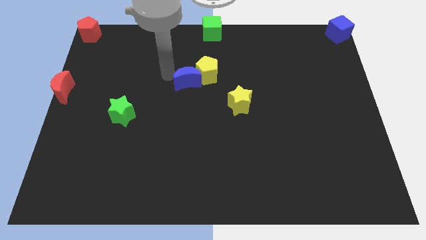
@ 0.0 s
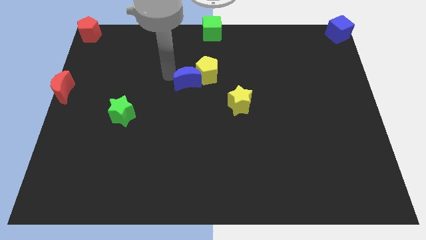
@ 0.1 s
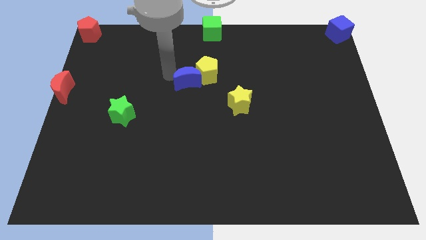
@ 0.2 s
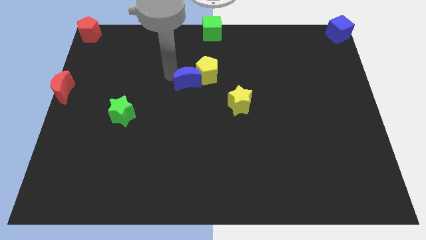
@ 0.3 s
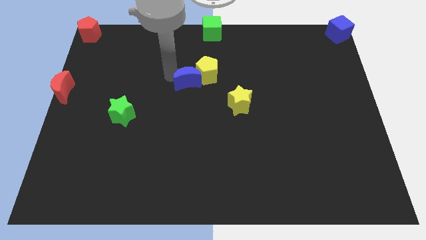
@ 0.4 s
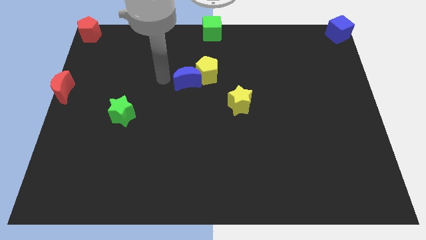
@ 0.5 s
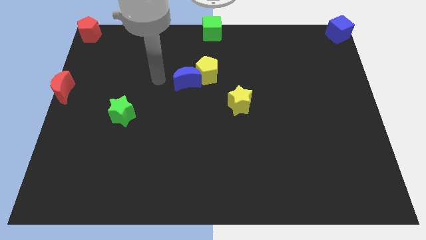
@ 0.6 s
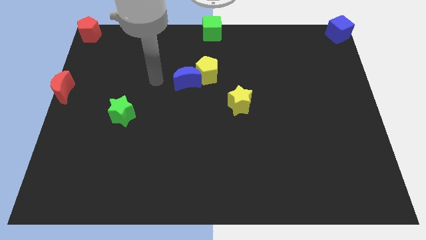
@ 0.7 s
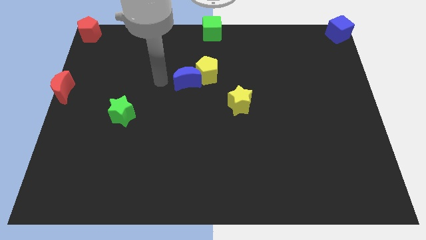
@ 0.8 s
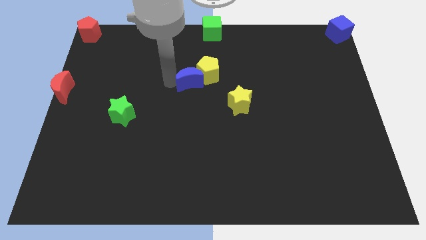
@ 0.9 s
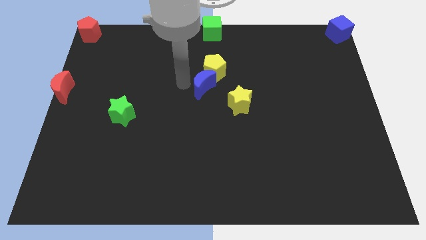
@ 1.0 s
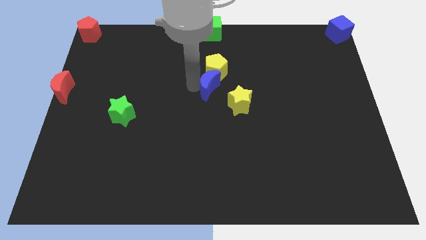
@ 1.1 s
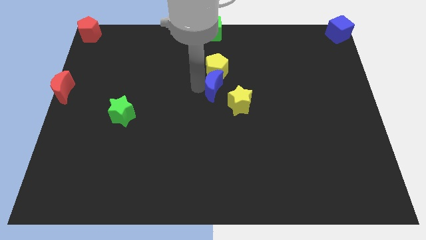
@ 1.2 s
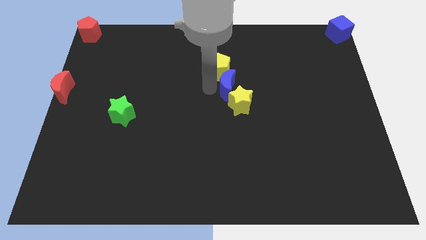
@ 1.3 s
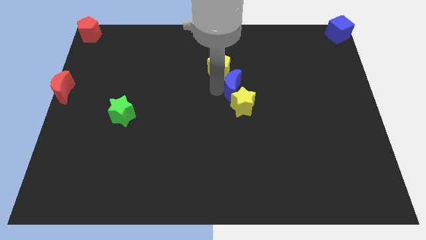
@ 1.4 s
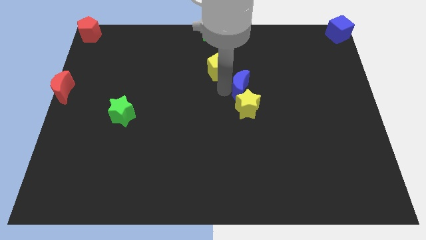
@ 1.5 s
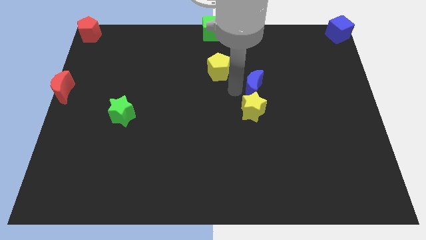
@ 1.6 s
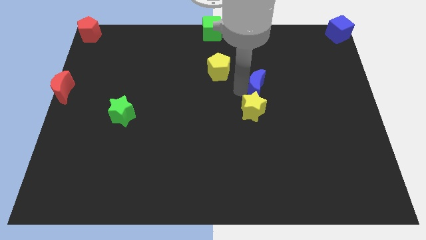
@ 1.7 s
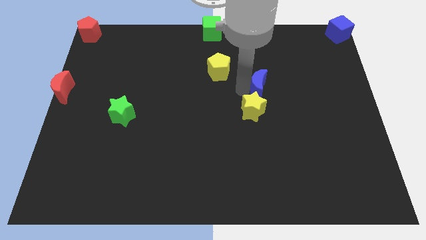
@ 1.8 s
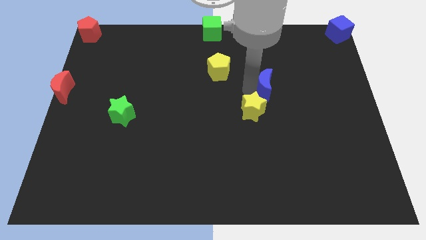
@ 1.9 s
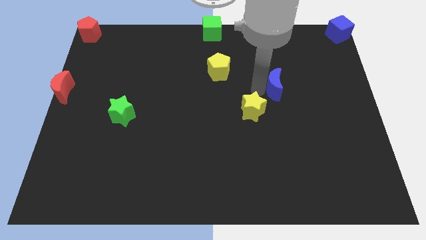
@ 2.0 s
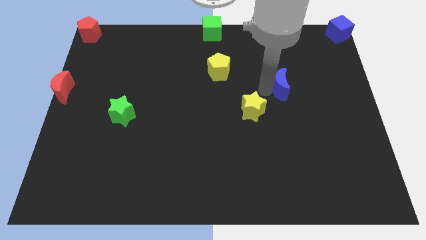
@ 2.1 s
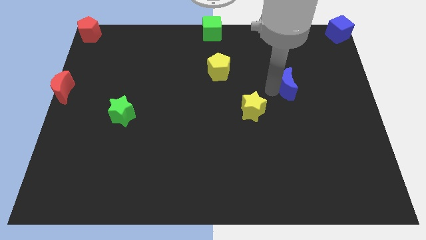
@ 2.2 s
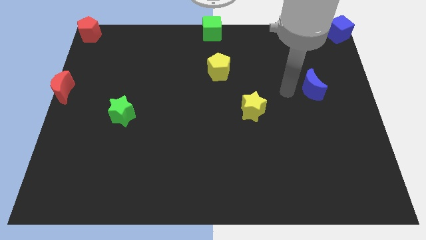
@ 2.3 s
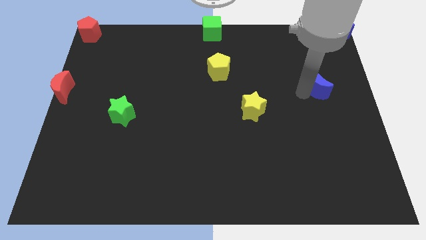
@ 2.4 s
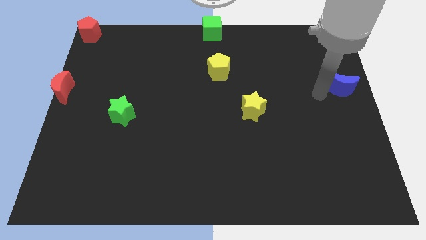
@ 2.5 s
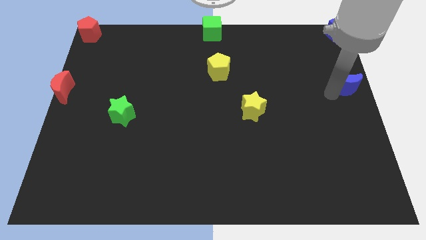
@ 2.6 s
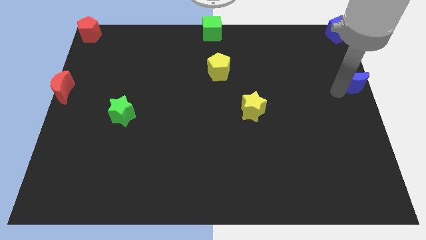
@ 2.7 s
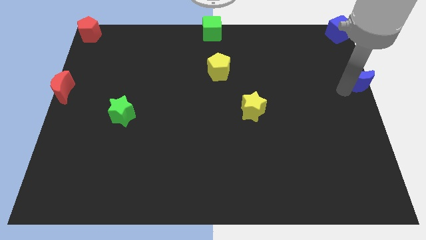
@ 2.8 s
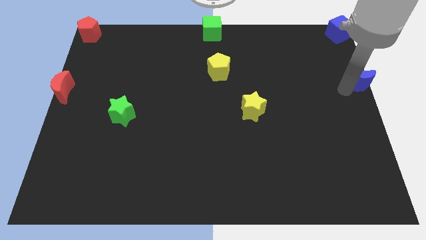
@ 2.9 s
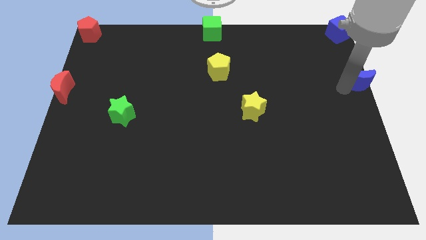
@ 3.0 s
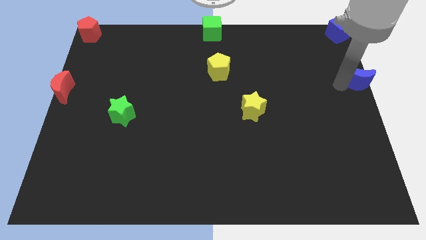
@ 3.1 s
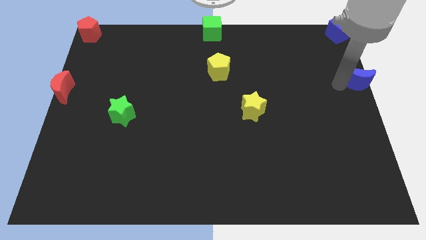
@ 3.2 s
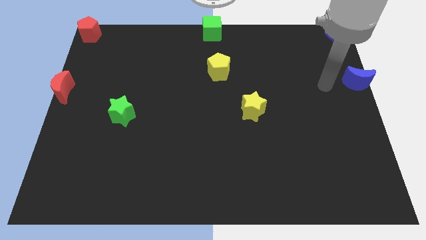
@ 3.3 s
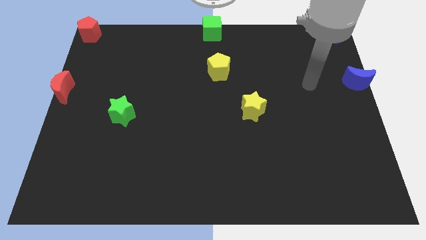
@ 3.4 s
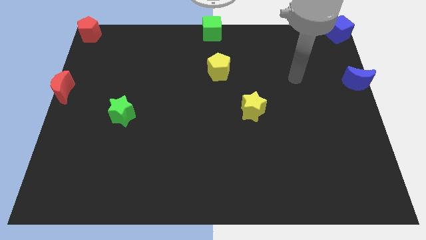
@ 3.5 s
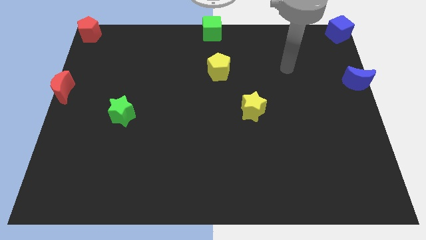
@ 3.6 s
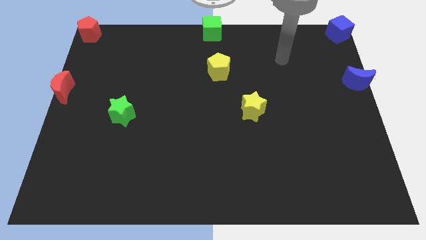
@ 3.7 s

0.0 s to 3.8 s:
push the blue crescent to the right of the board

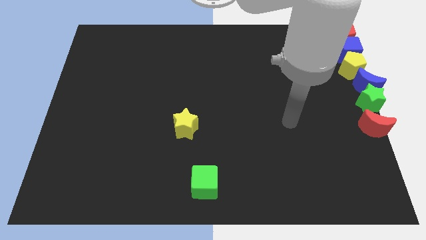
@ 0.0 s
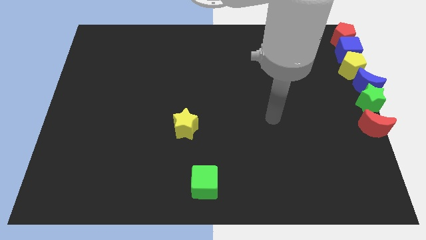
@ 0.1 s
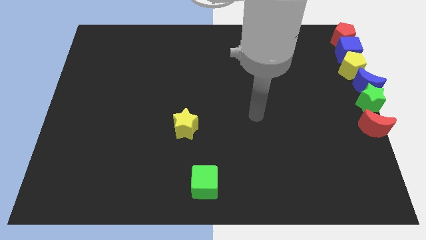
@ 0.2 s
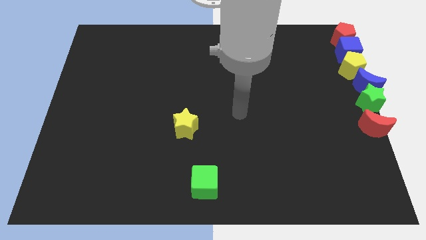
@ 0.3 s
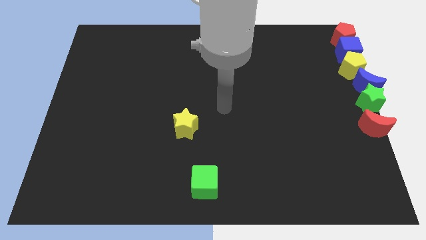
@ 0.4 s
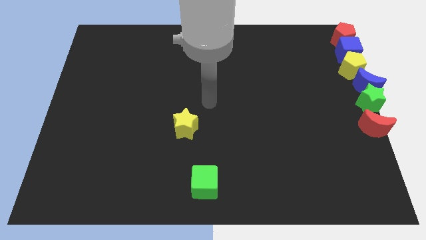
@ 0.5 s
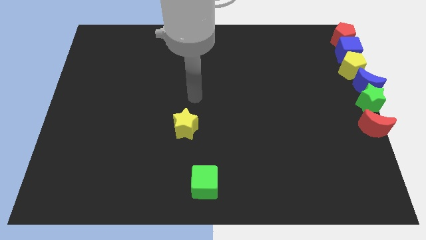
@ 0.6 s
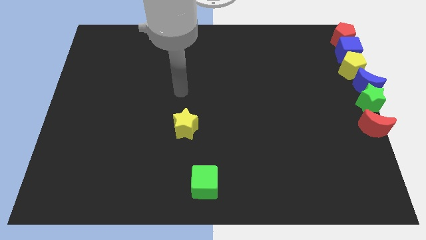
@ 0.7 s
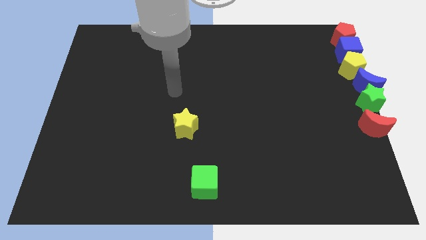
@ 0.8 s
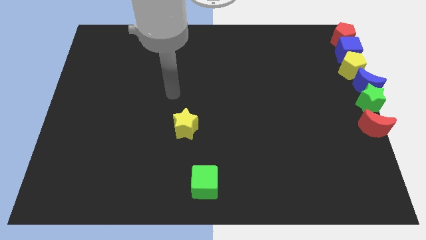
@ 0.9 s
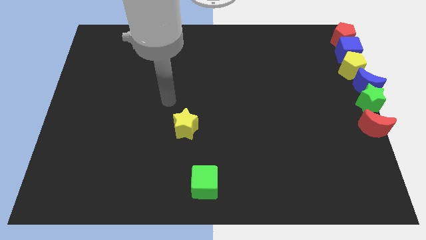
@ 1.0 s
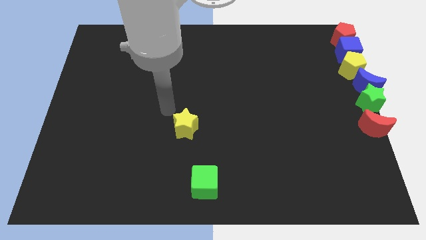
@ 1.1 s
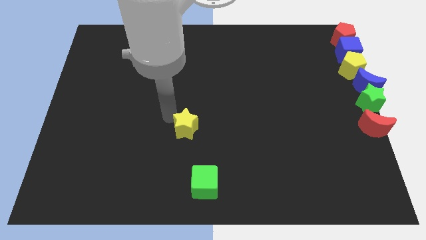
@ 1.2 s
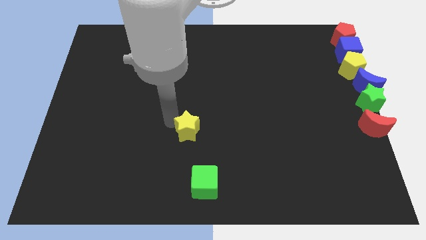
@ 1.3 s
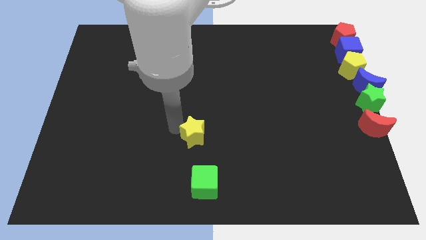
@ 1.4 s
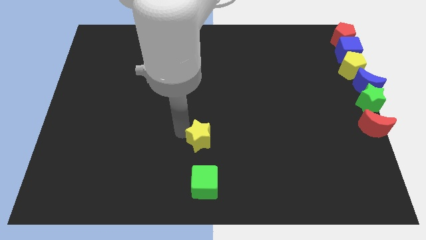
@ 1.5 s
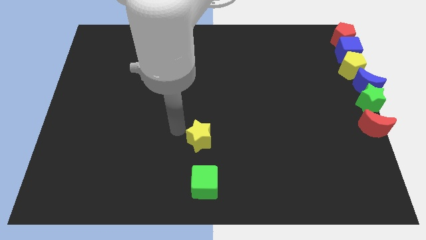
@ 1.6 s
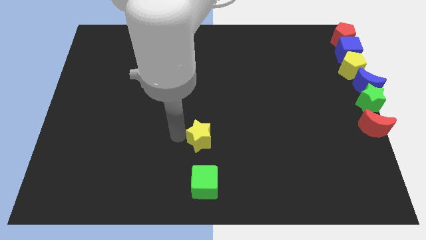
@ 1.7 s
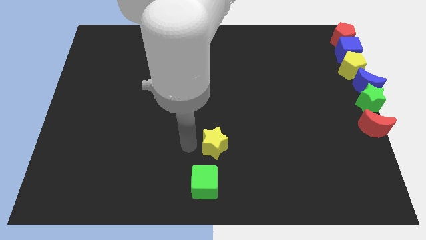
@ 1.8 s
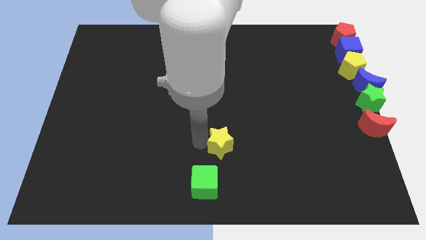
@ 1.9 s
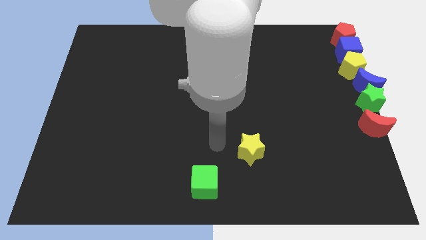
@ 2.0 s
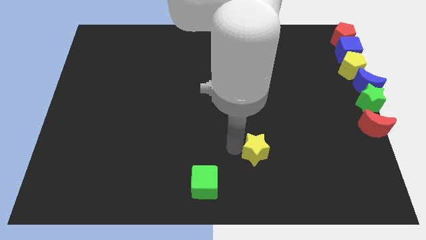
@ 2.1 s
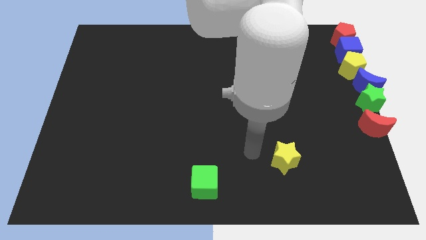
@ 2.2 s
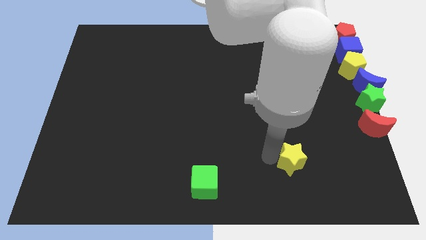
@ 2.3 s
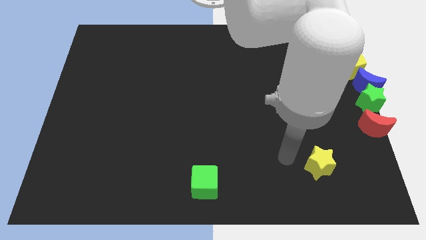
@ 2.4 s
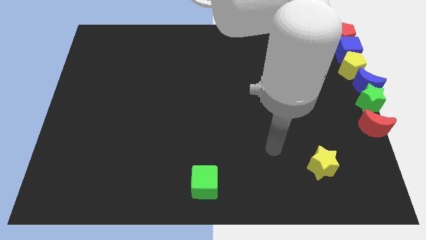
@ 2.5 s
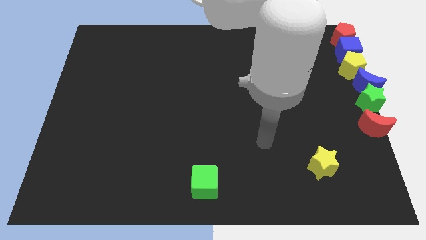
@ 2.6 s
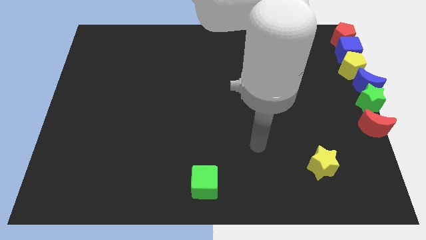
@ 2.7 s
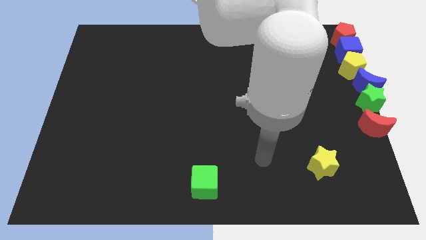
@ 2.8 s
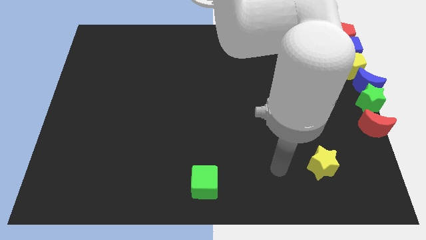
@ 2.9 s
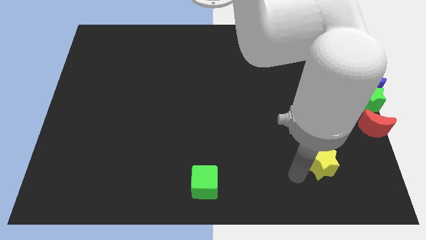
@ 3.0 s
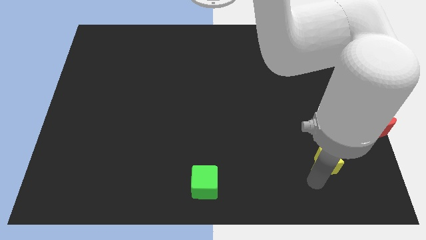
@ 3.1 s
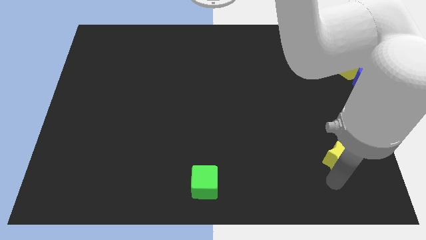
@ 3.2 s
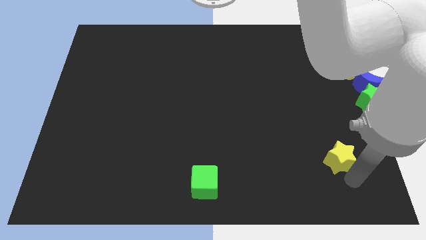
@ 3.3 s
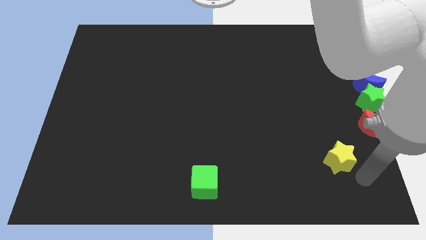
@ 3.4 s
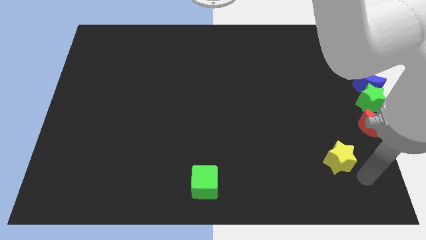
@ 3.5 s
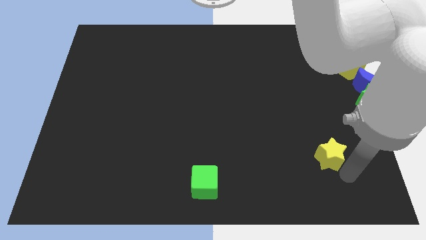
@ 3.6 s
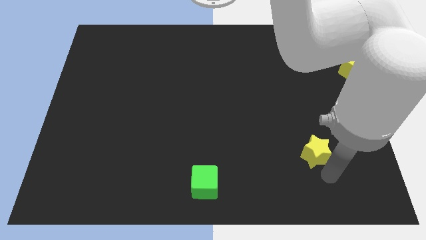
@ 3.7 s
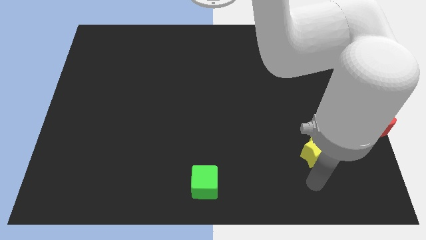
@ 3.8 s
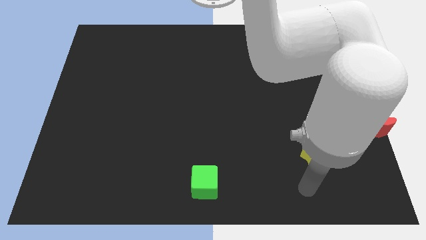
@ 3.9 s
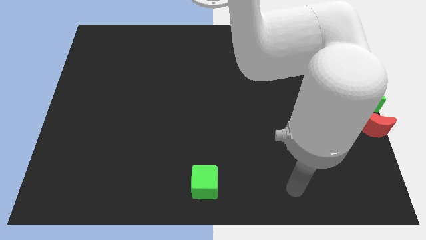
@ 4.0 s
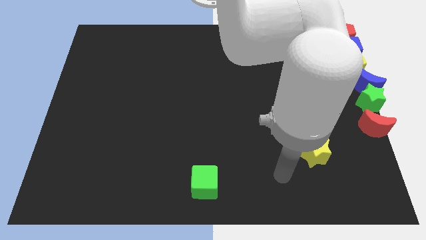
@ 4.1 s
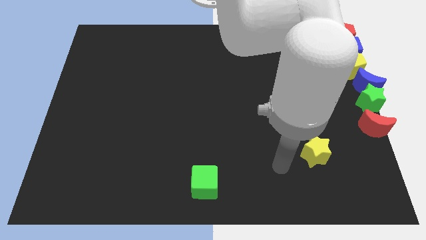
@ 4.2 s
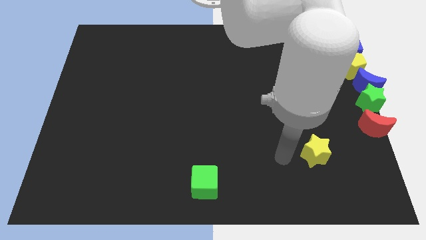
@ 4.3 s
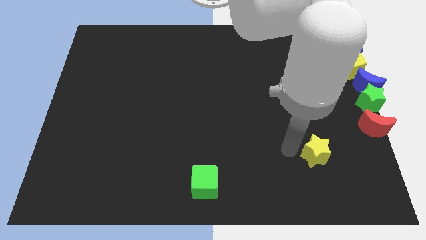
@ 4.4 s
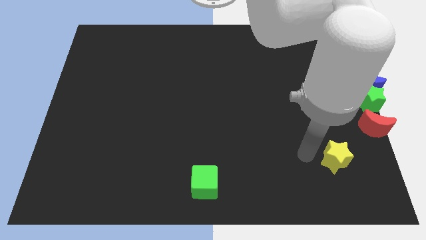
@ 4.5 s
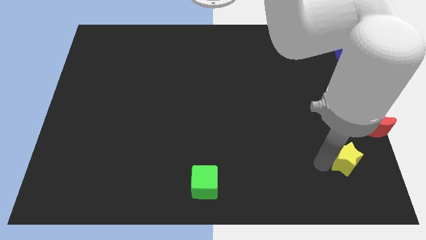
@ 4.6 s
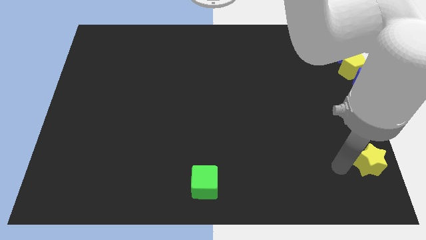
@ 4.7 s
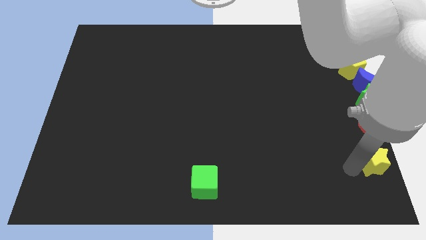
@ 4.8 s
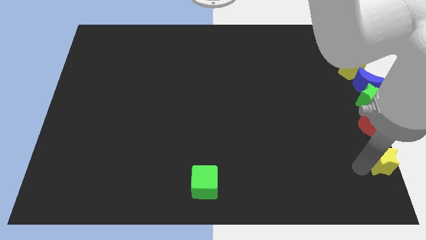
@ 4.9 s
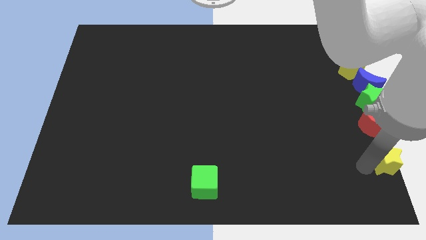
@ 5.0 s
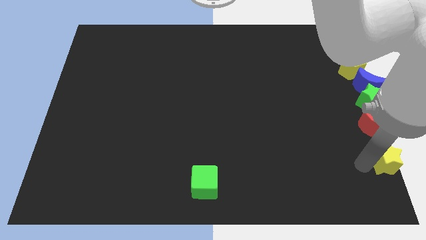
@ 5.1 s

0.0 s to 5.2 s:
move the yellow star below the red moon
